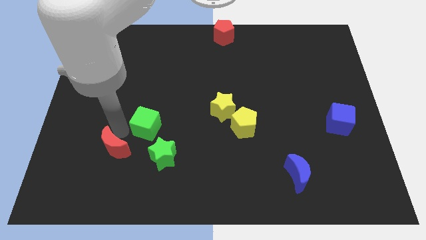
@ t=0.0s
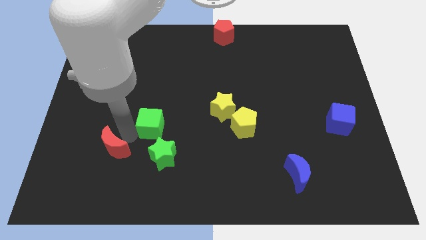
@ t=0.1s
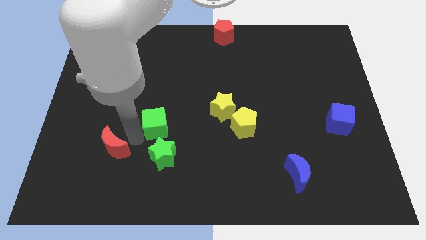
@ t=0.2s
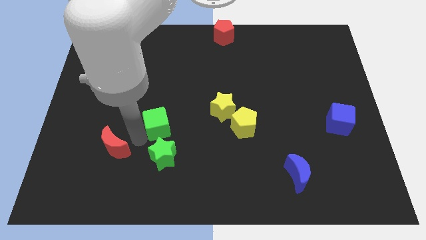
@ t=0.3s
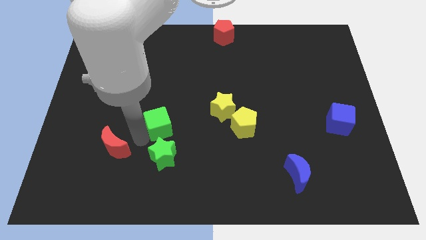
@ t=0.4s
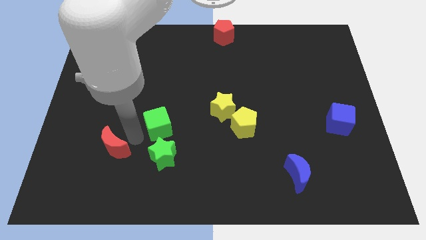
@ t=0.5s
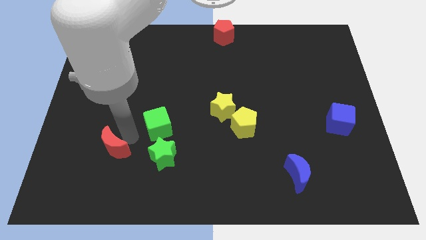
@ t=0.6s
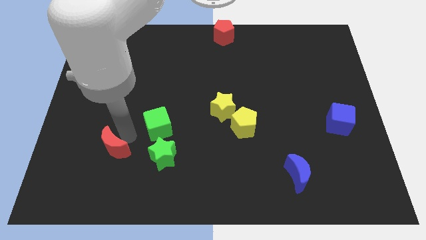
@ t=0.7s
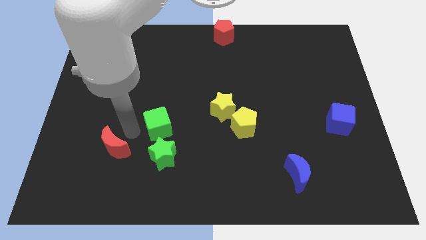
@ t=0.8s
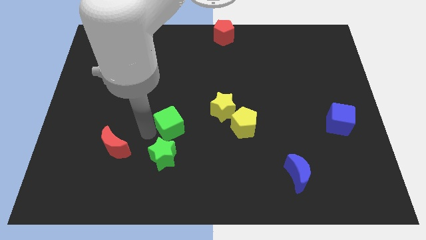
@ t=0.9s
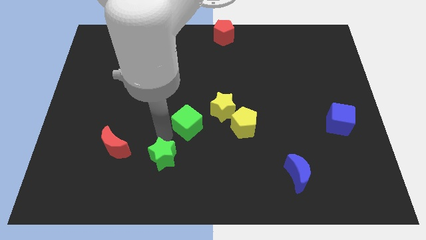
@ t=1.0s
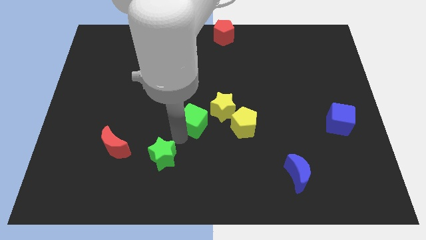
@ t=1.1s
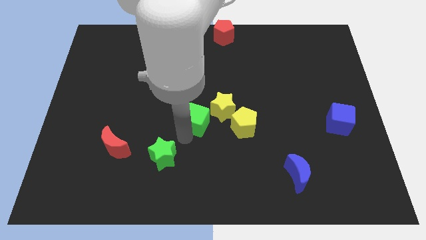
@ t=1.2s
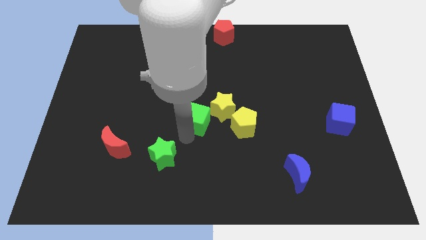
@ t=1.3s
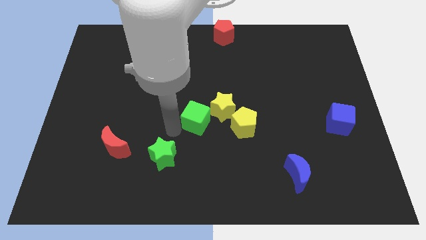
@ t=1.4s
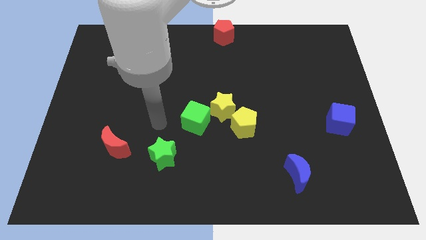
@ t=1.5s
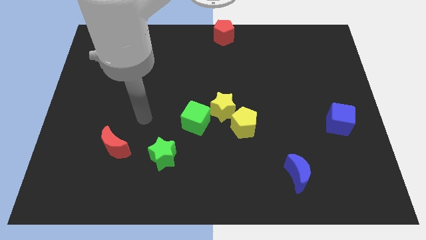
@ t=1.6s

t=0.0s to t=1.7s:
push the green cube into the yellow star

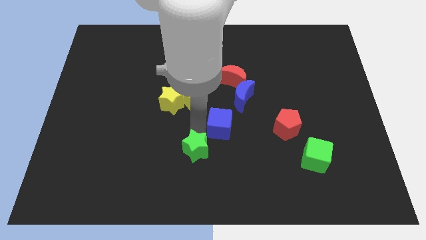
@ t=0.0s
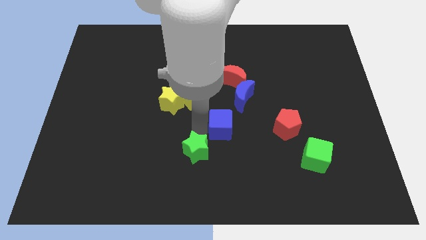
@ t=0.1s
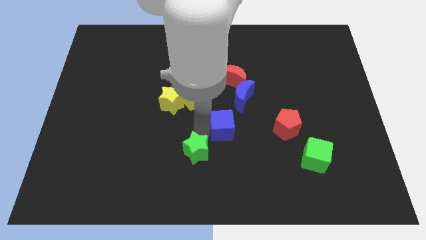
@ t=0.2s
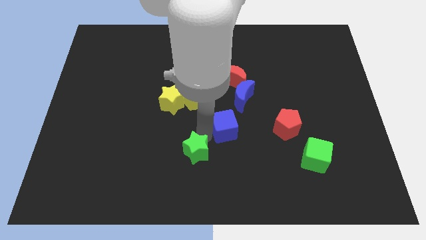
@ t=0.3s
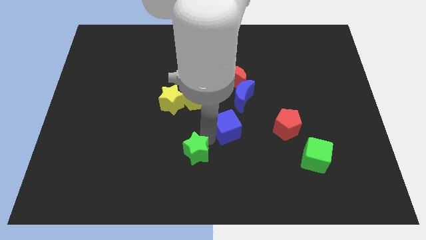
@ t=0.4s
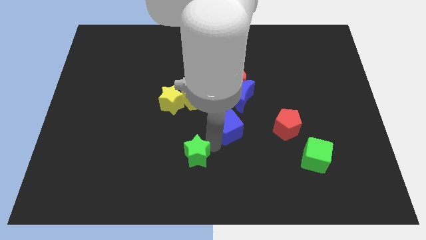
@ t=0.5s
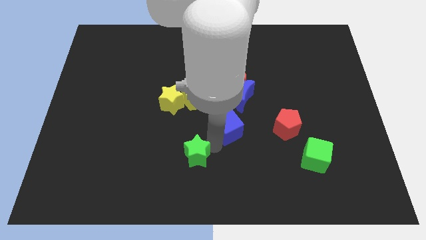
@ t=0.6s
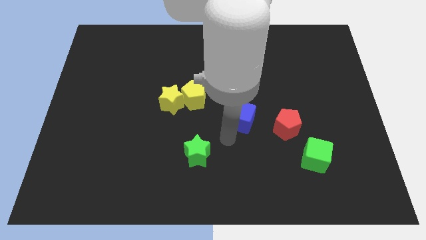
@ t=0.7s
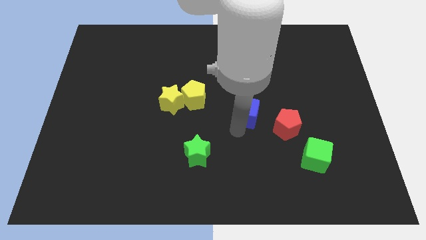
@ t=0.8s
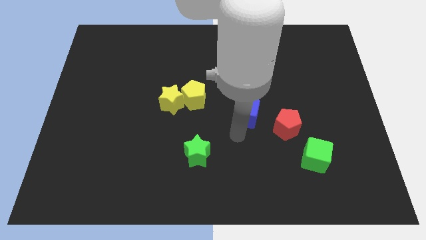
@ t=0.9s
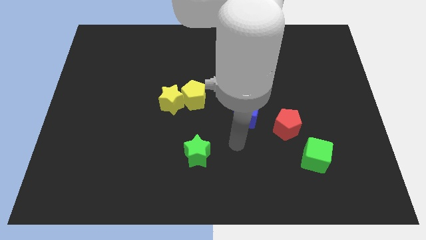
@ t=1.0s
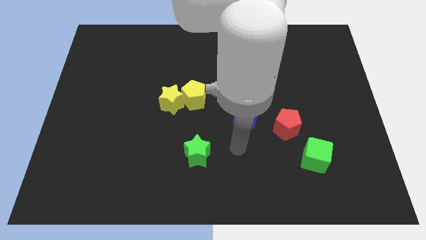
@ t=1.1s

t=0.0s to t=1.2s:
place the blue cube below the blue crescent

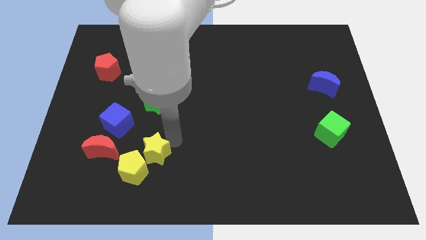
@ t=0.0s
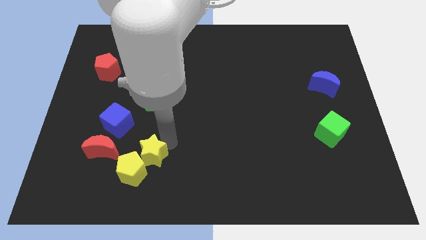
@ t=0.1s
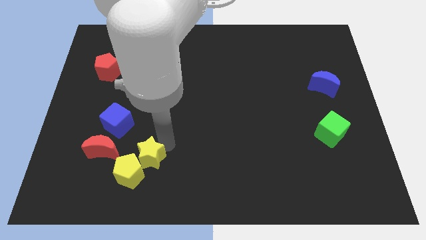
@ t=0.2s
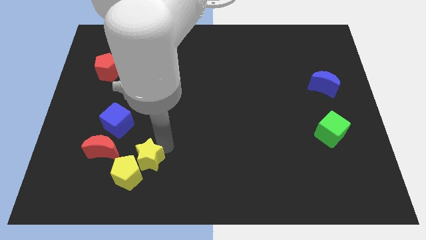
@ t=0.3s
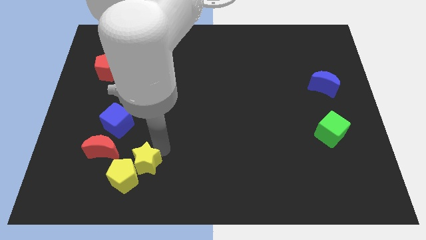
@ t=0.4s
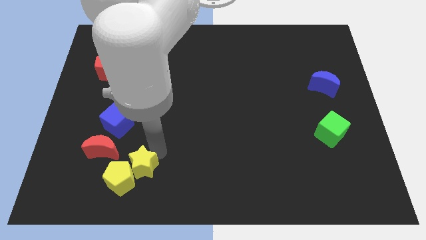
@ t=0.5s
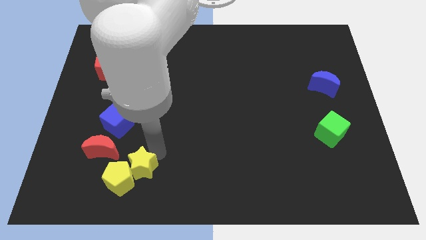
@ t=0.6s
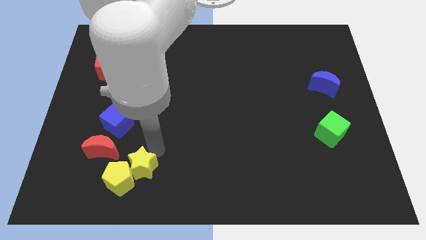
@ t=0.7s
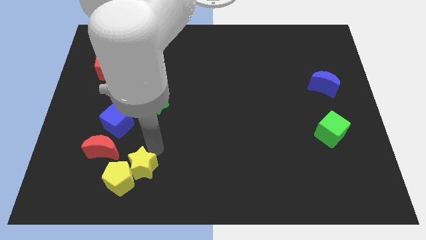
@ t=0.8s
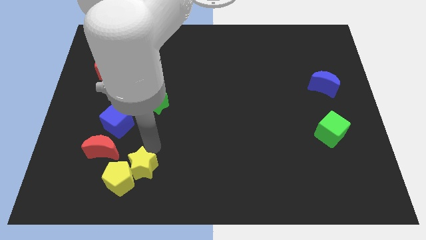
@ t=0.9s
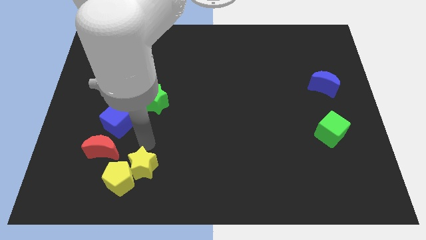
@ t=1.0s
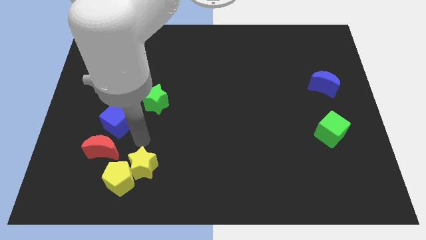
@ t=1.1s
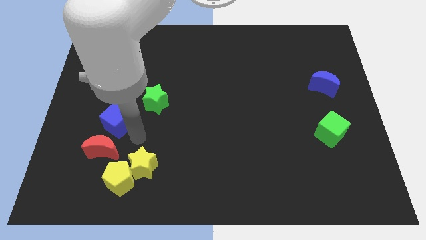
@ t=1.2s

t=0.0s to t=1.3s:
move the yellow blocks slightly bottom left

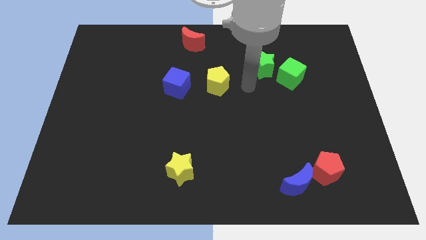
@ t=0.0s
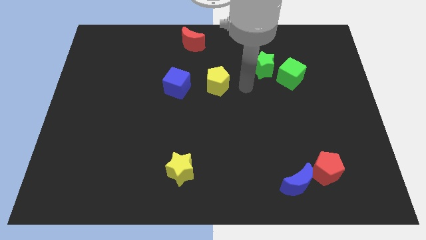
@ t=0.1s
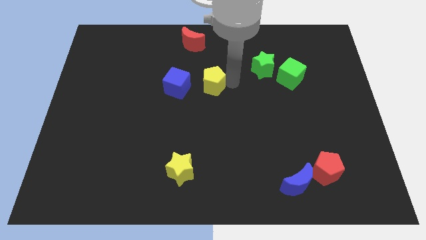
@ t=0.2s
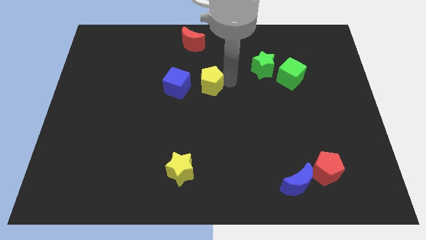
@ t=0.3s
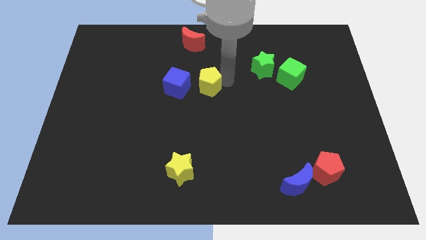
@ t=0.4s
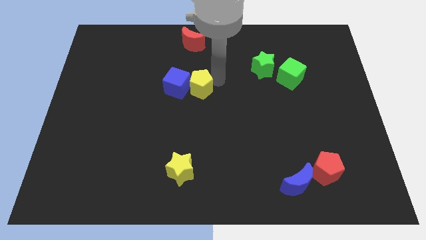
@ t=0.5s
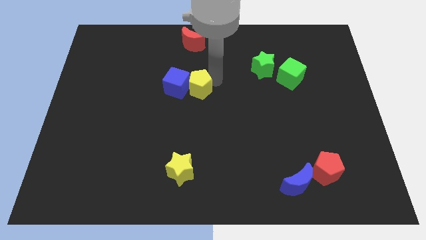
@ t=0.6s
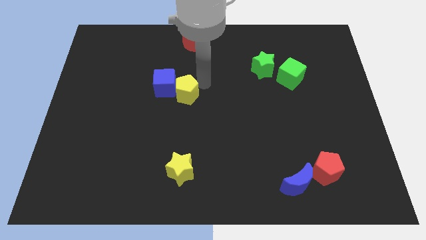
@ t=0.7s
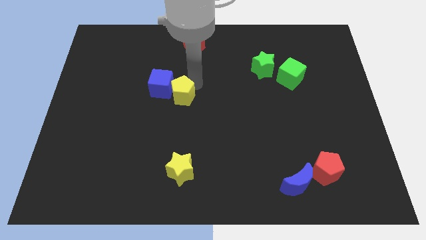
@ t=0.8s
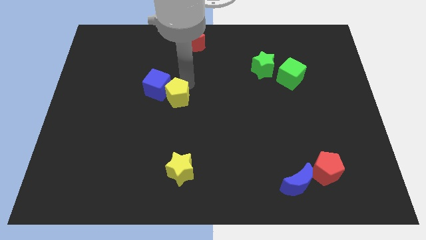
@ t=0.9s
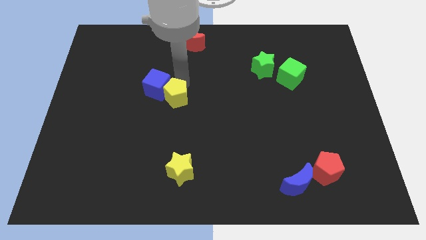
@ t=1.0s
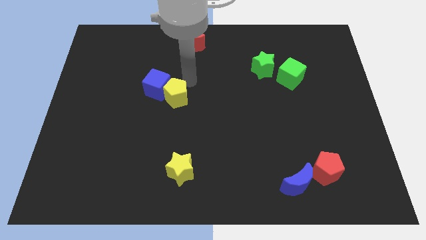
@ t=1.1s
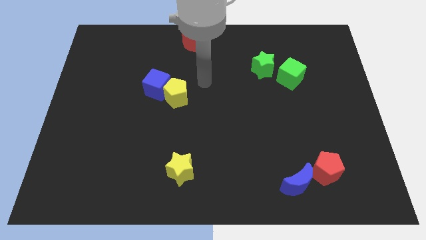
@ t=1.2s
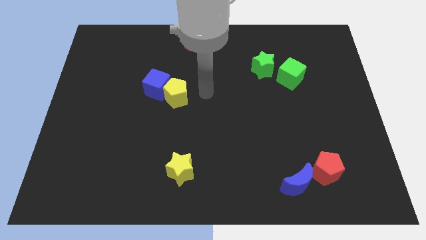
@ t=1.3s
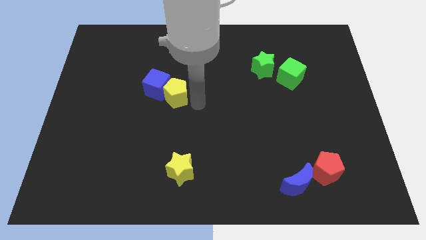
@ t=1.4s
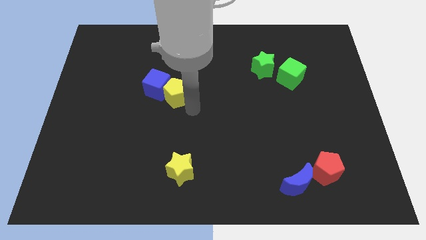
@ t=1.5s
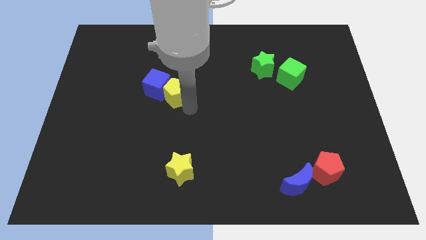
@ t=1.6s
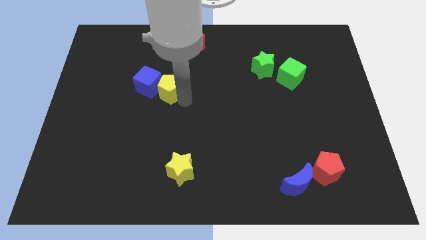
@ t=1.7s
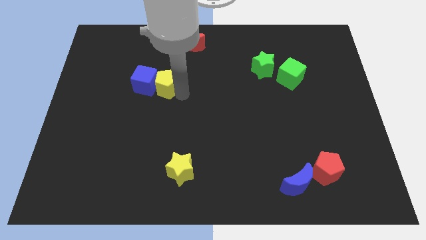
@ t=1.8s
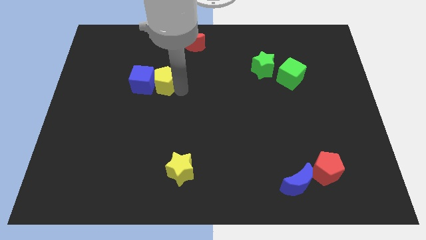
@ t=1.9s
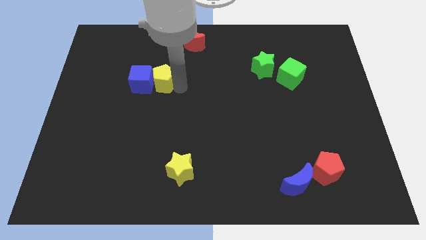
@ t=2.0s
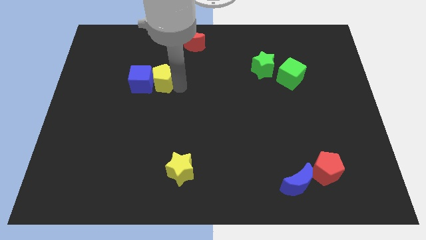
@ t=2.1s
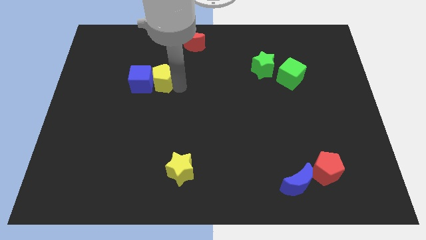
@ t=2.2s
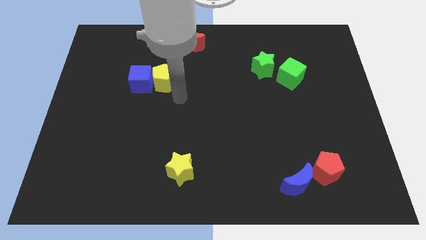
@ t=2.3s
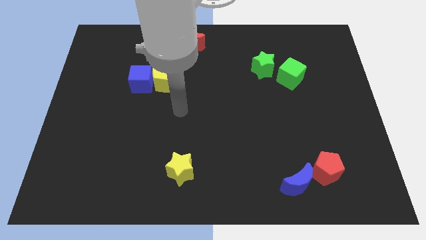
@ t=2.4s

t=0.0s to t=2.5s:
move the yellow pentagon with a blue cube

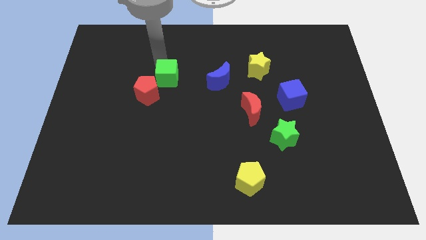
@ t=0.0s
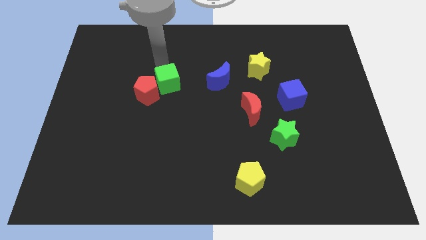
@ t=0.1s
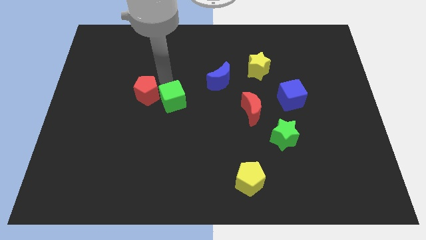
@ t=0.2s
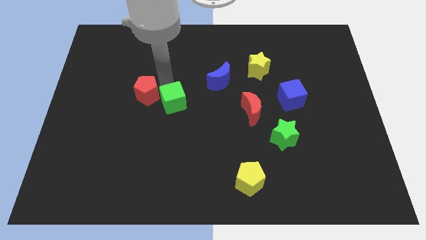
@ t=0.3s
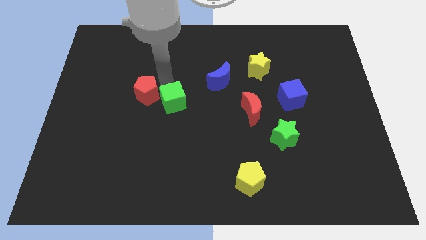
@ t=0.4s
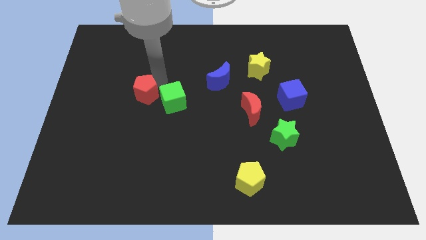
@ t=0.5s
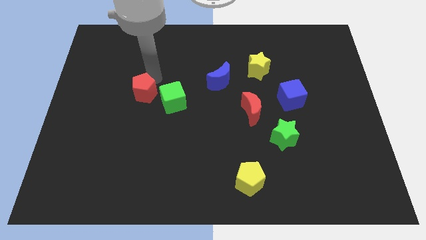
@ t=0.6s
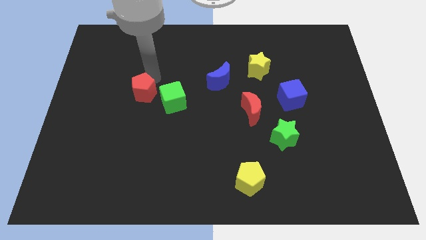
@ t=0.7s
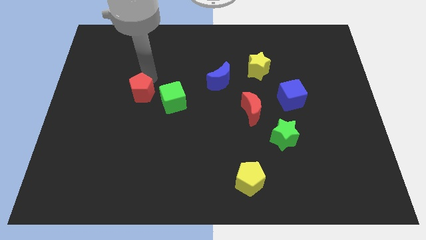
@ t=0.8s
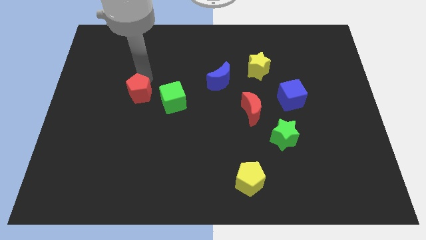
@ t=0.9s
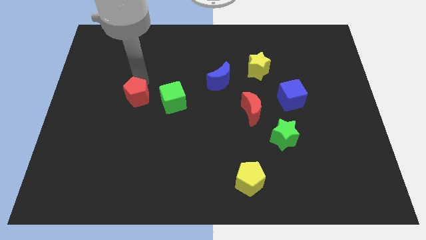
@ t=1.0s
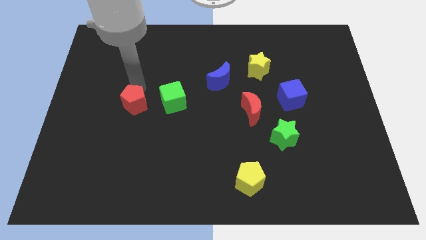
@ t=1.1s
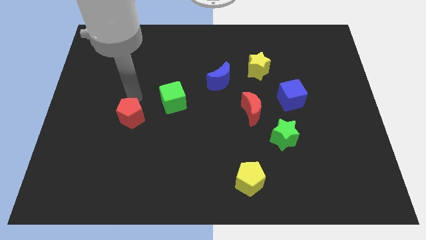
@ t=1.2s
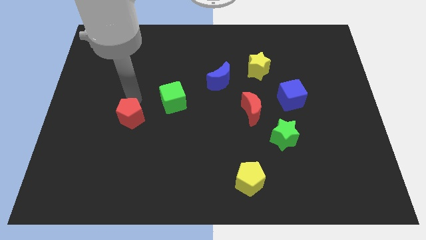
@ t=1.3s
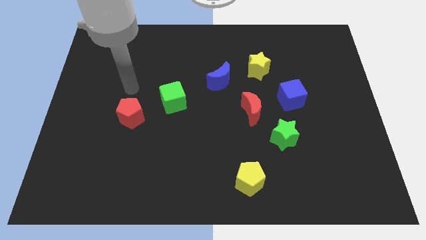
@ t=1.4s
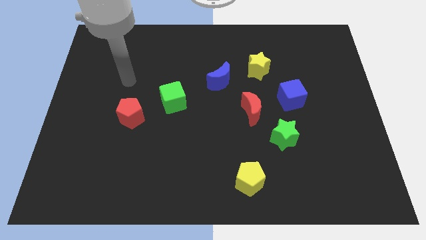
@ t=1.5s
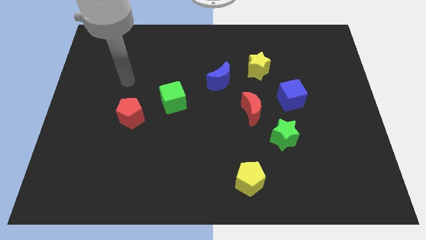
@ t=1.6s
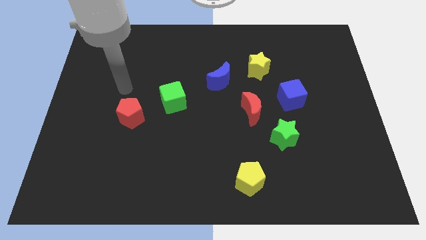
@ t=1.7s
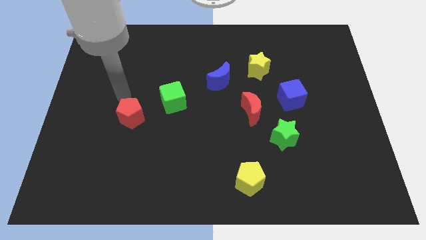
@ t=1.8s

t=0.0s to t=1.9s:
separate green cube and red pentagon

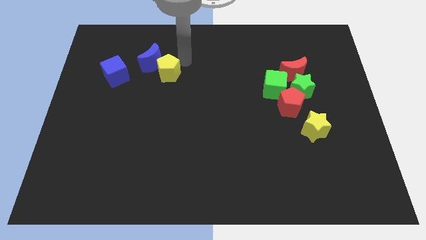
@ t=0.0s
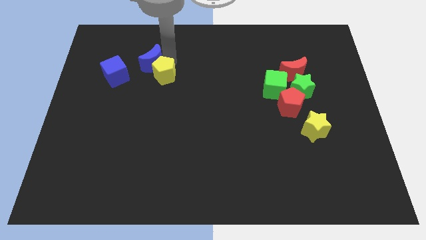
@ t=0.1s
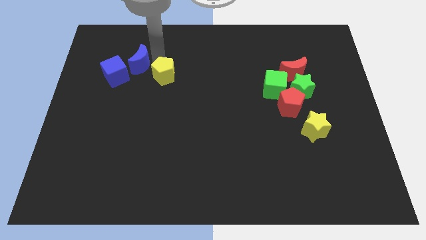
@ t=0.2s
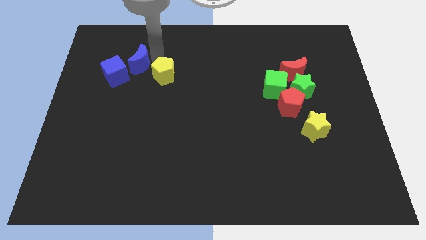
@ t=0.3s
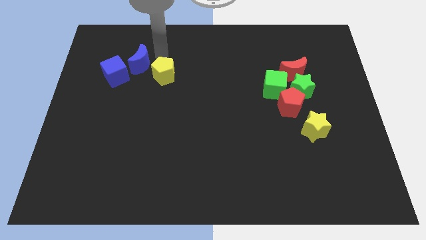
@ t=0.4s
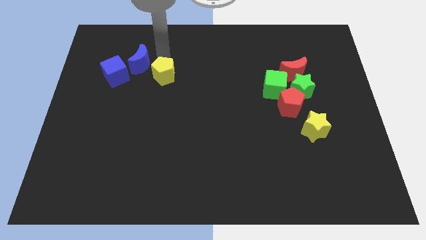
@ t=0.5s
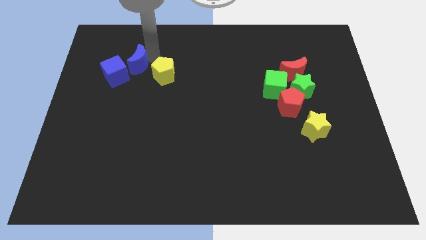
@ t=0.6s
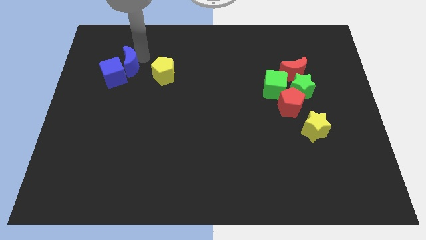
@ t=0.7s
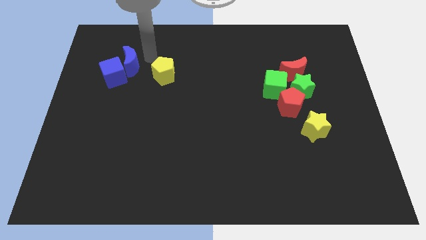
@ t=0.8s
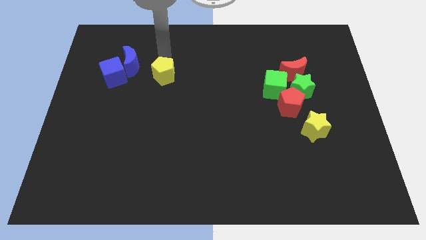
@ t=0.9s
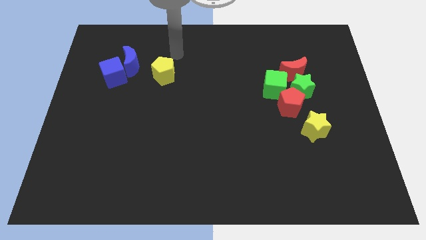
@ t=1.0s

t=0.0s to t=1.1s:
move the blue crescent into the blue cube
